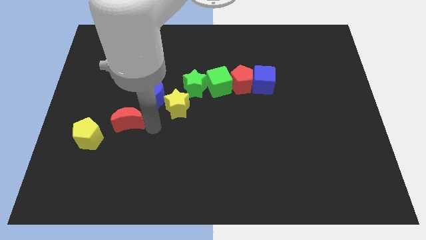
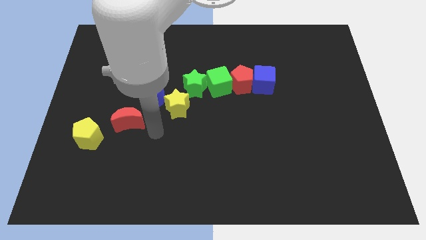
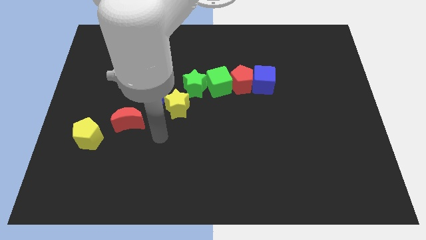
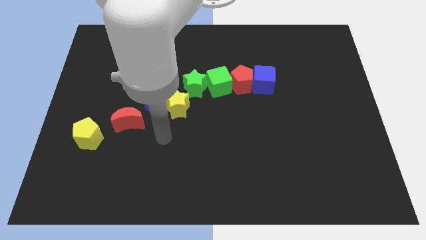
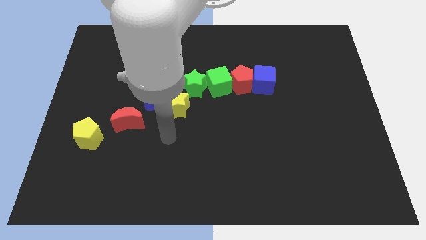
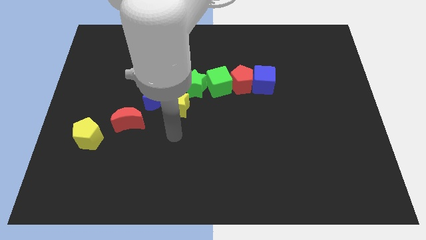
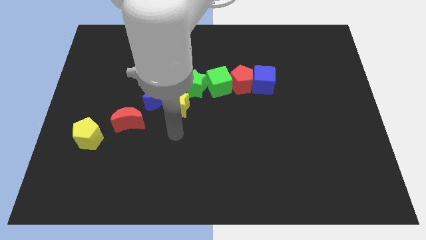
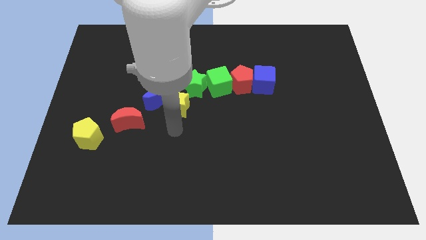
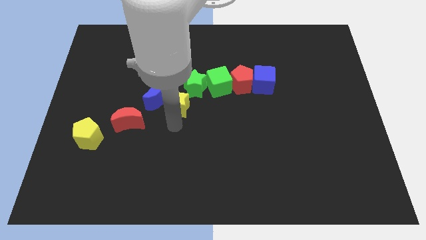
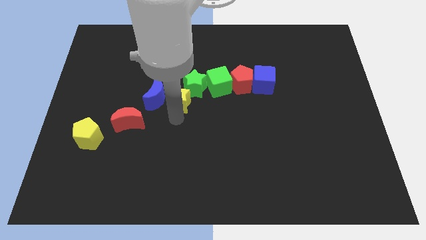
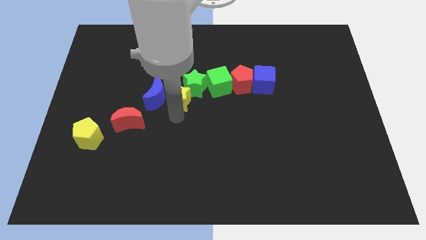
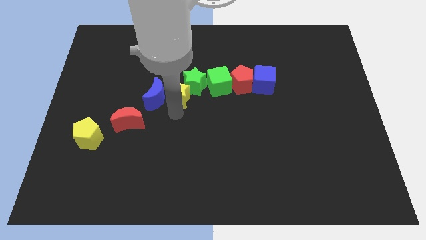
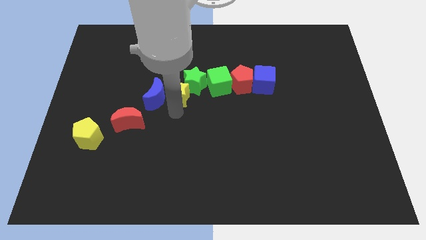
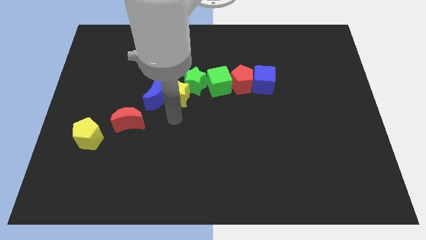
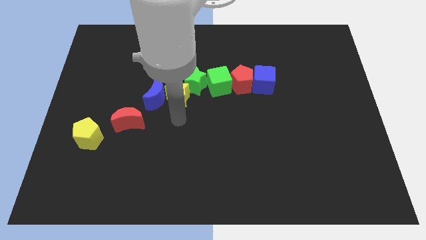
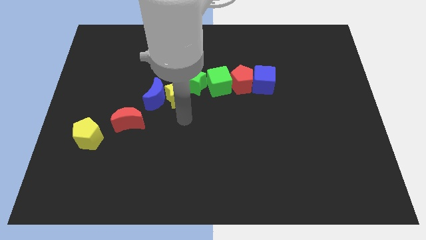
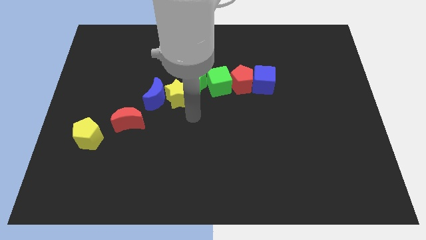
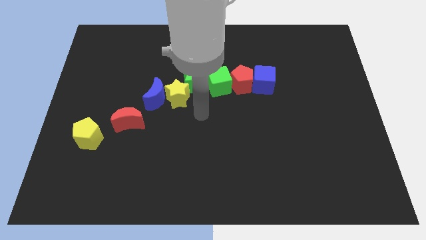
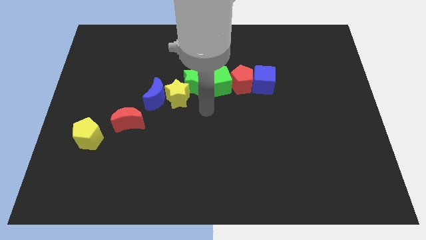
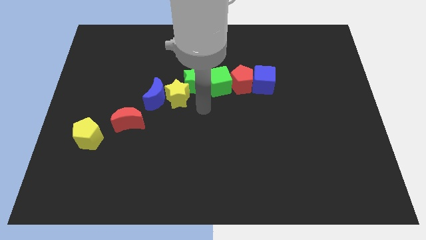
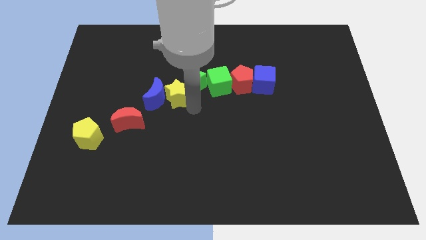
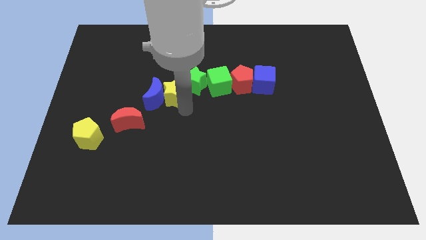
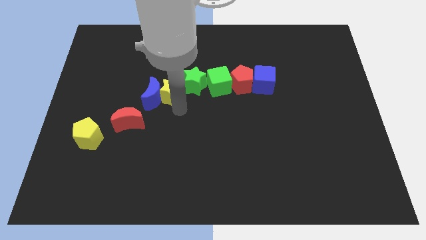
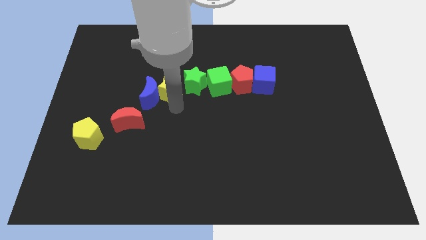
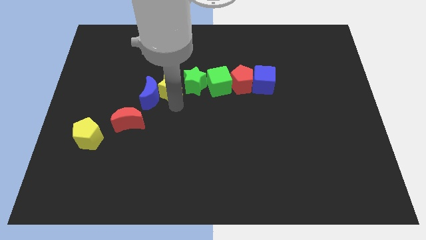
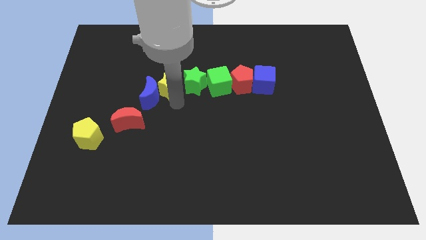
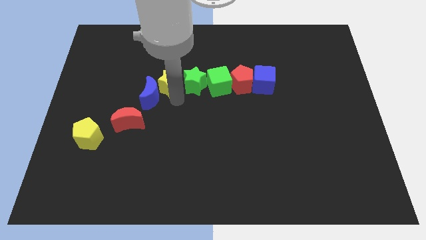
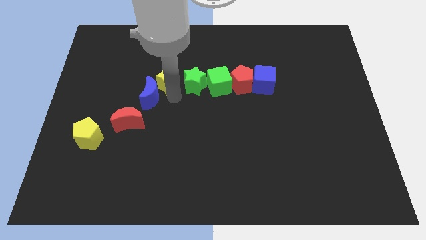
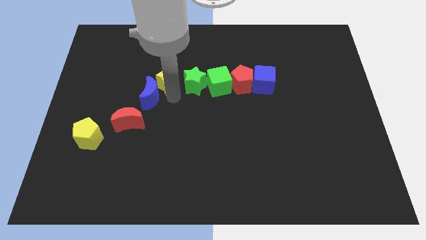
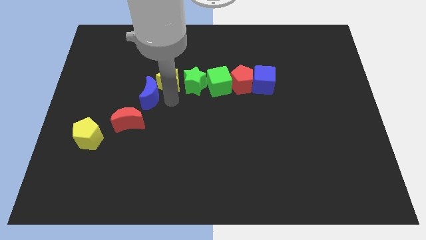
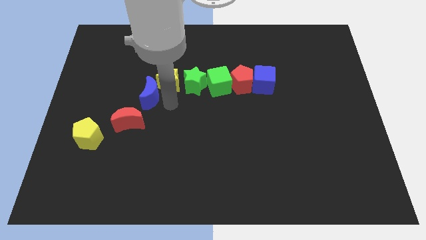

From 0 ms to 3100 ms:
place yellow star to the left of green star

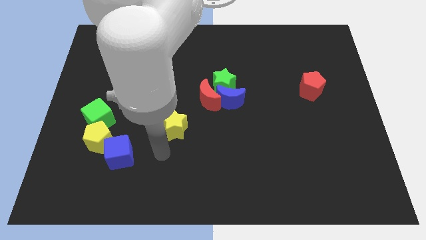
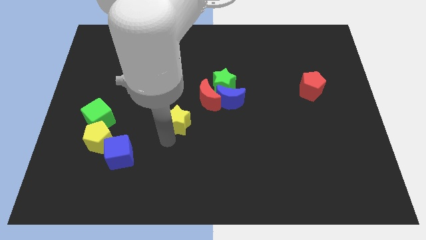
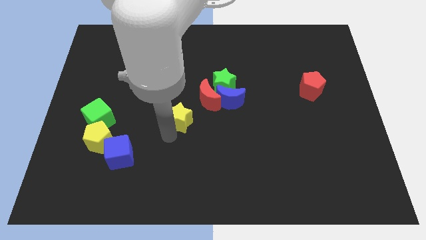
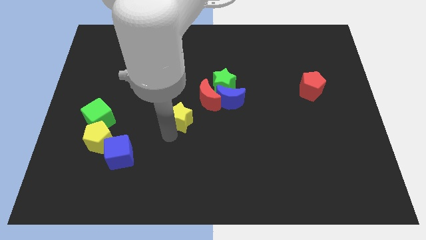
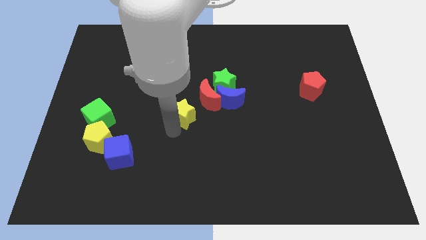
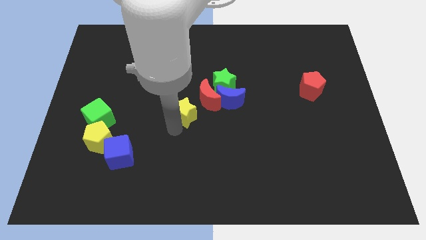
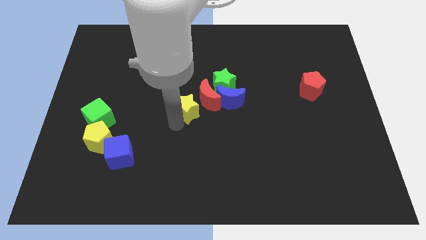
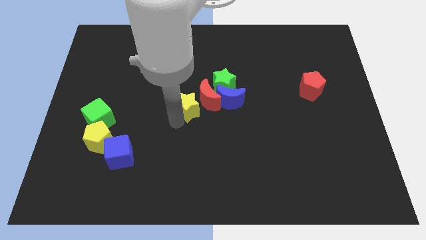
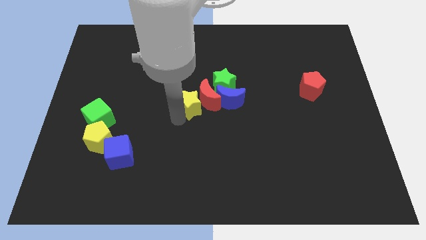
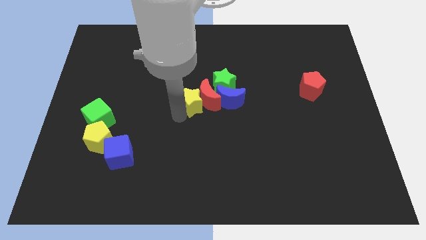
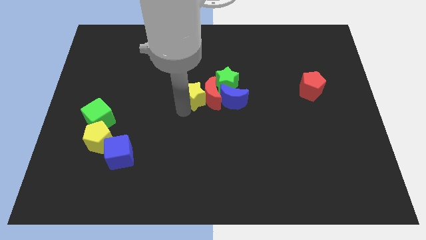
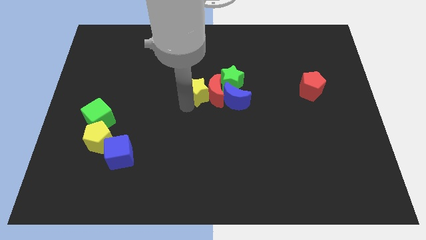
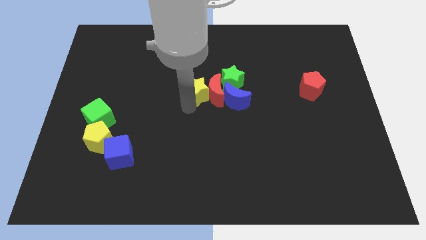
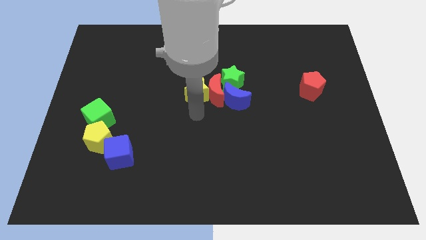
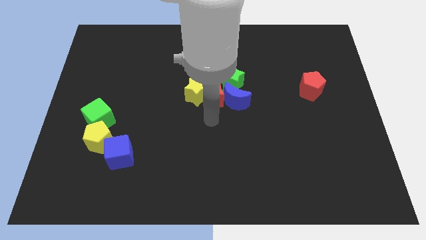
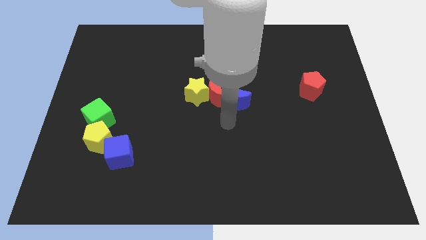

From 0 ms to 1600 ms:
push the yellow star left to the red crescent

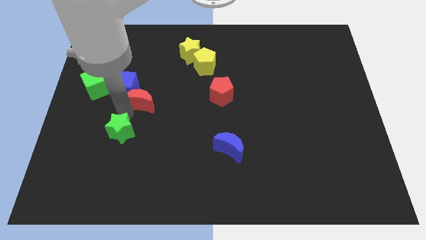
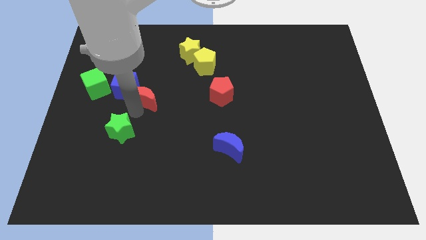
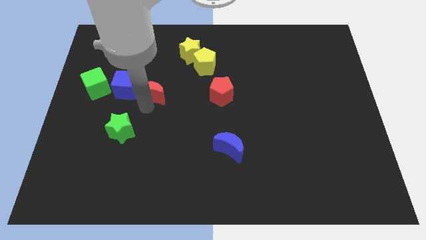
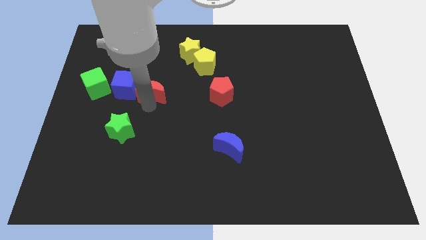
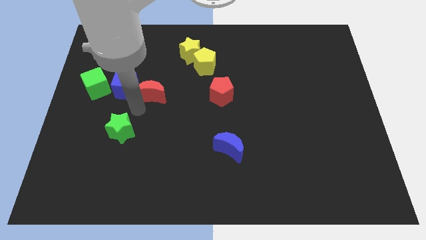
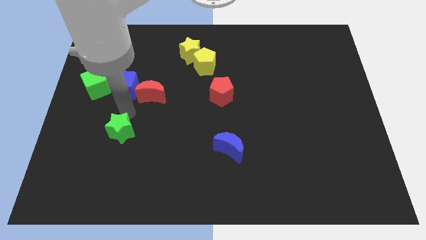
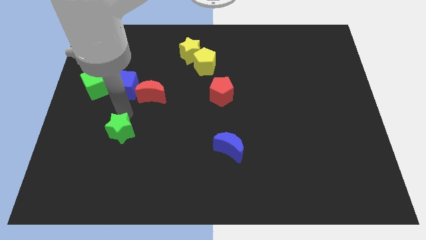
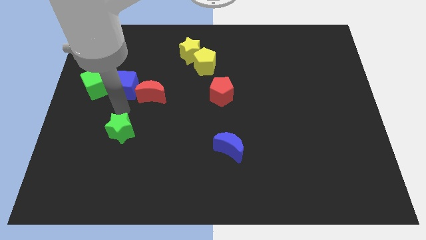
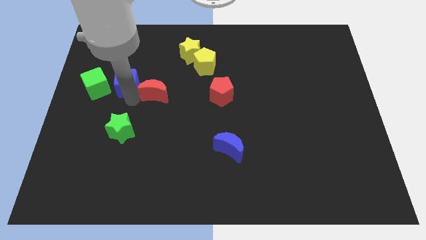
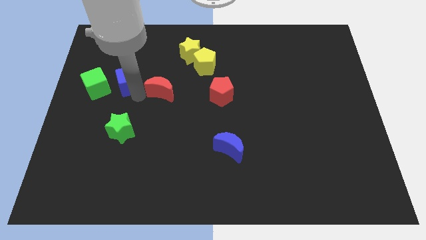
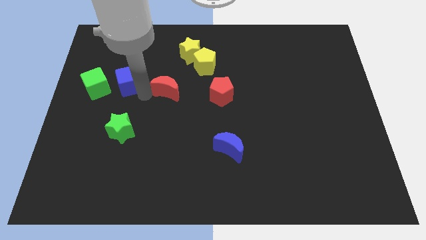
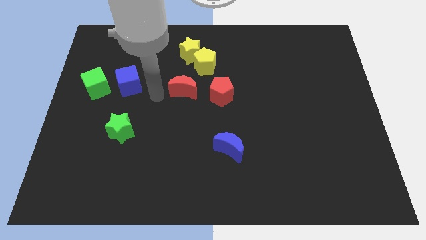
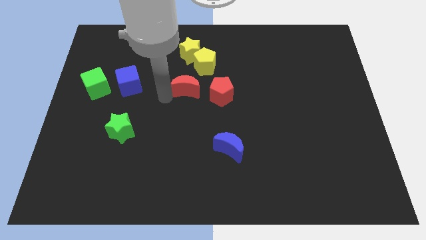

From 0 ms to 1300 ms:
move the red crescent to the top right of the green star

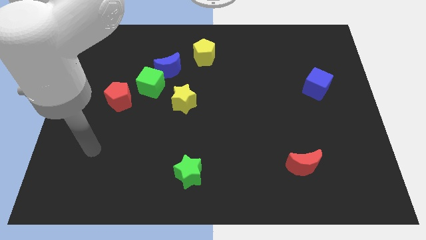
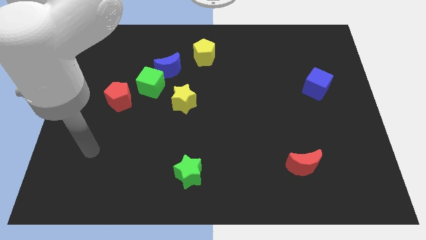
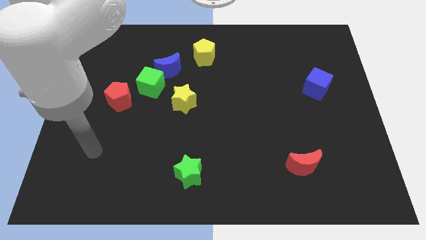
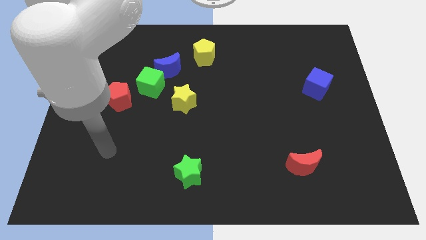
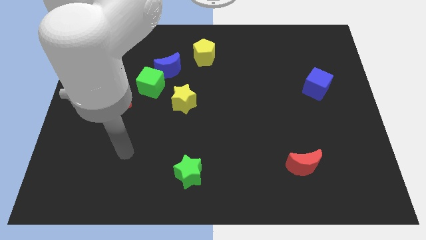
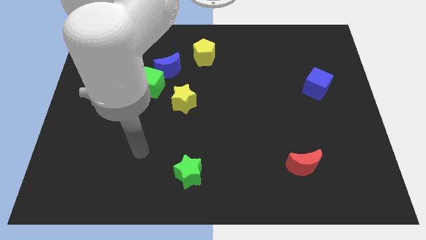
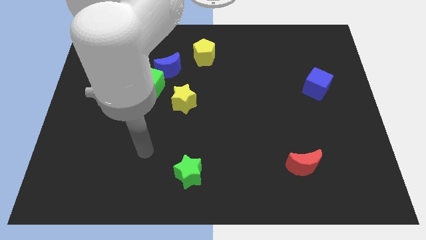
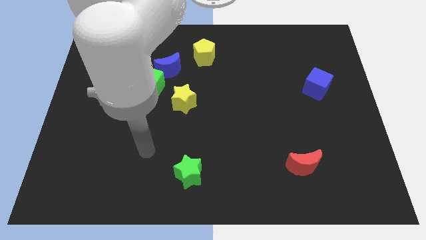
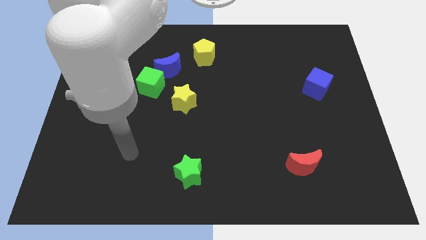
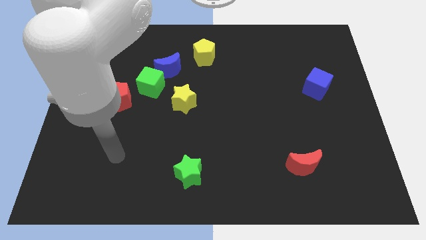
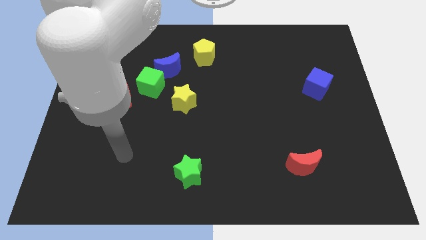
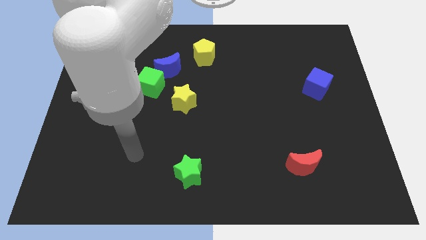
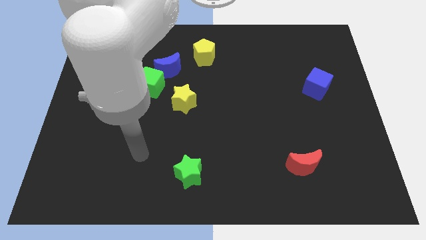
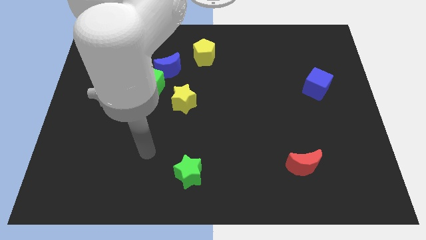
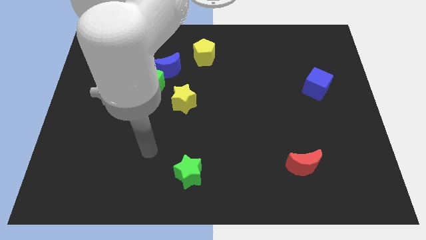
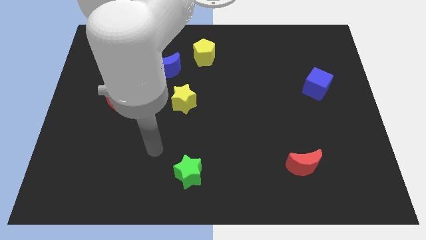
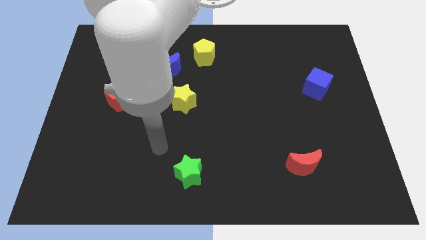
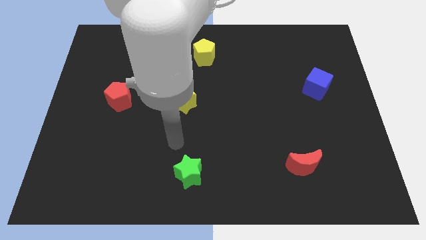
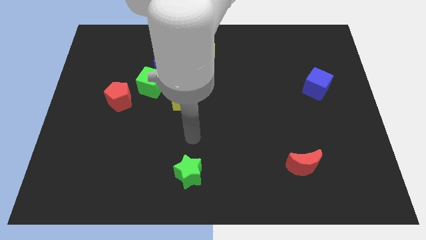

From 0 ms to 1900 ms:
point your arm above green star

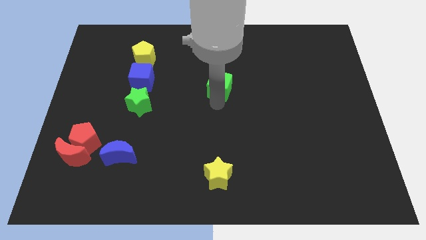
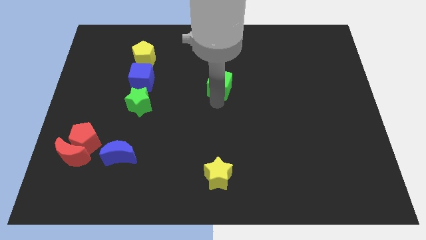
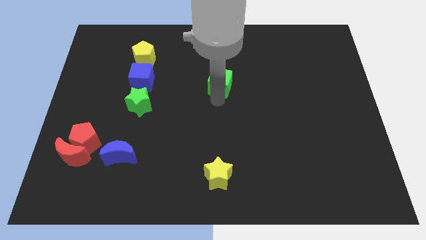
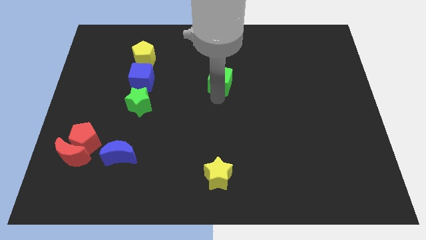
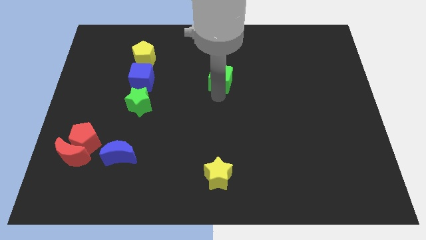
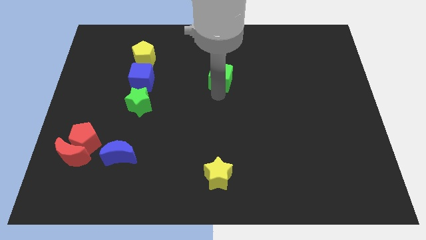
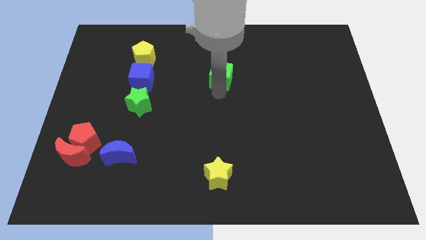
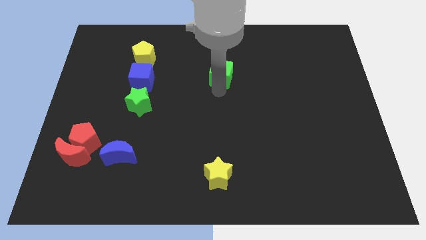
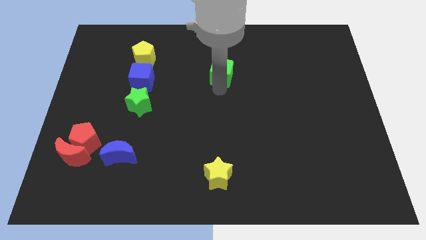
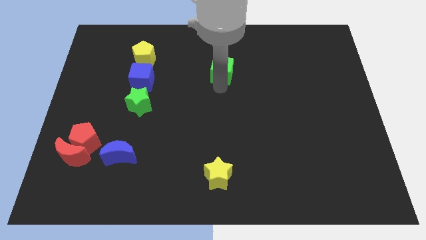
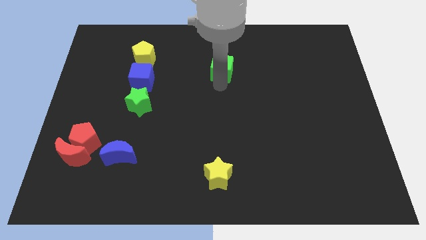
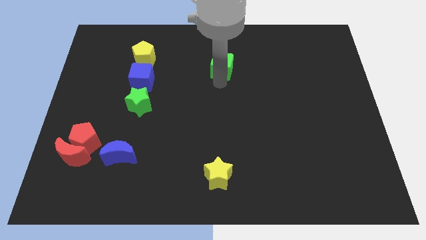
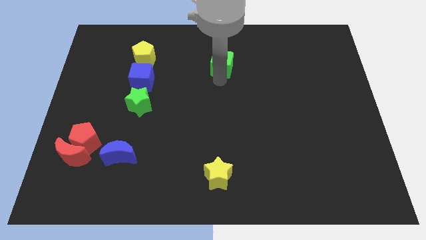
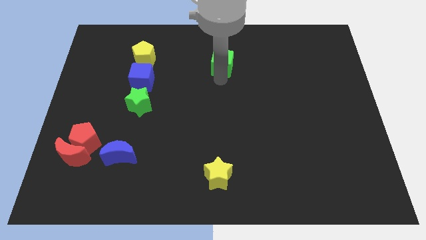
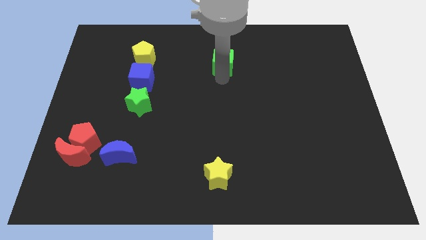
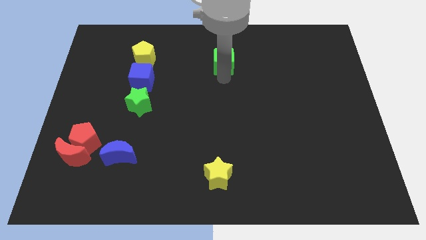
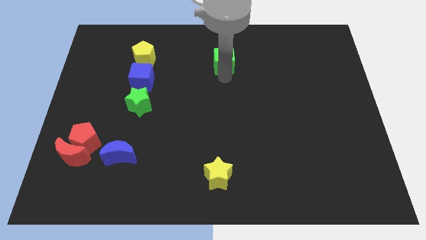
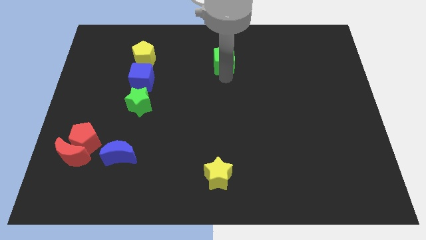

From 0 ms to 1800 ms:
push the green cube towards top center of the board
